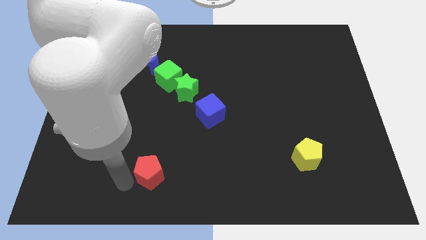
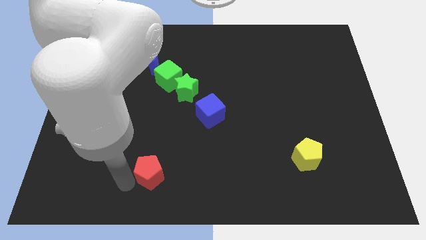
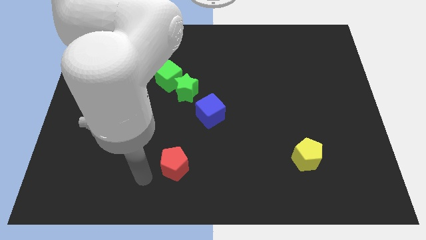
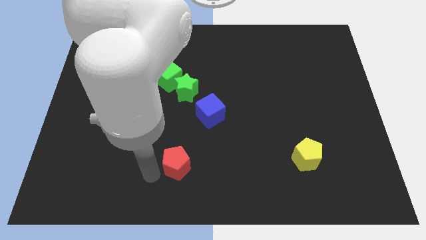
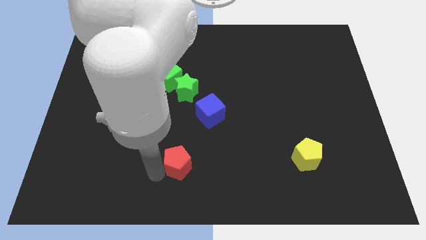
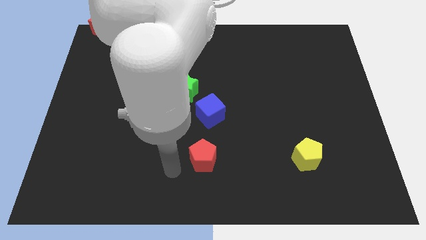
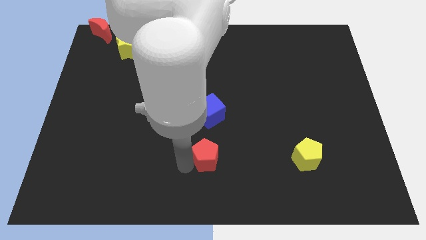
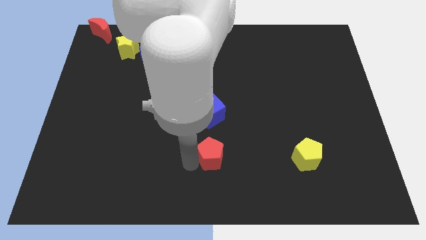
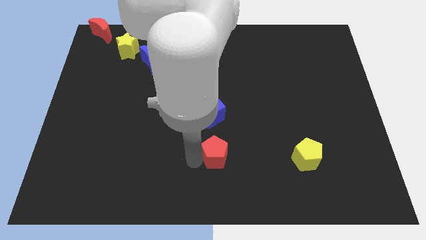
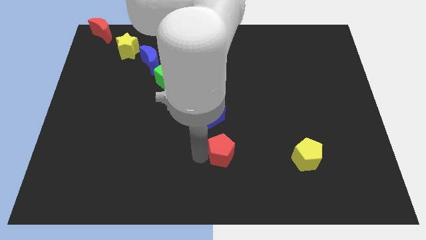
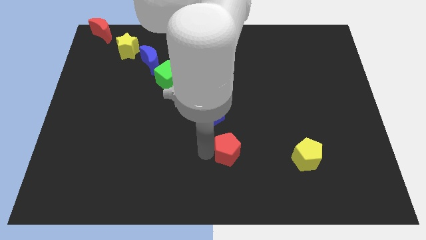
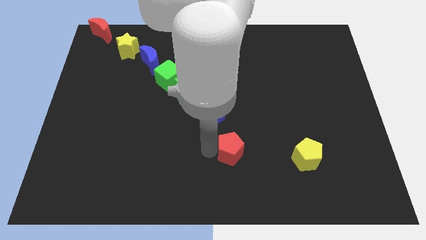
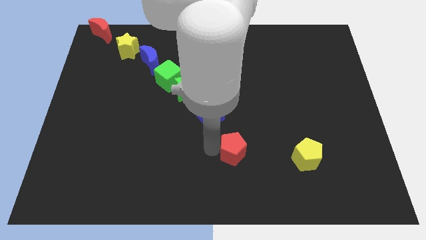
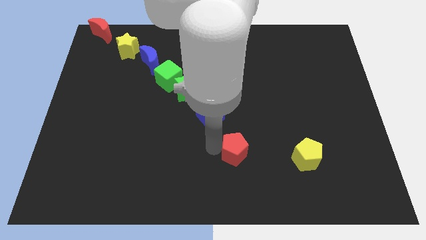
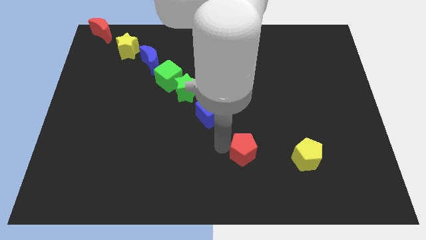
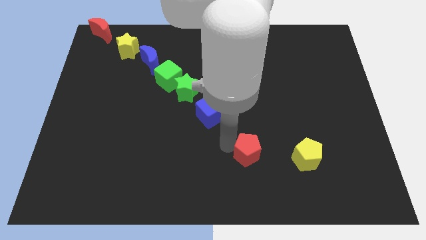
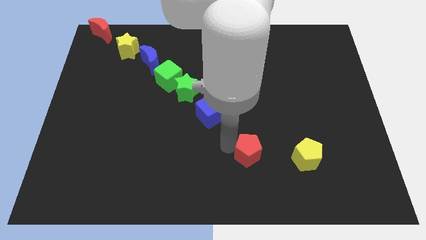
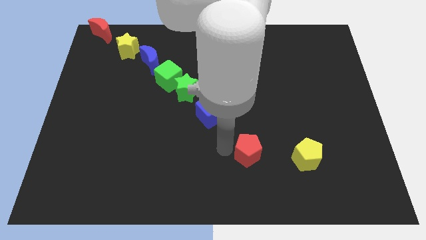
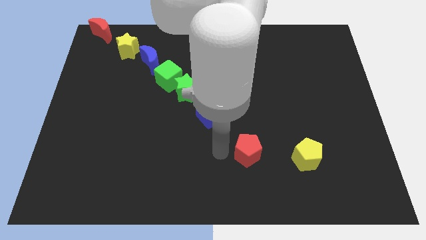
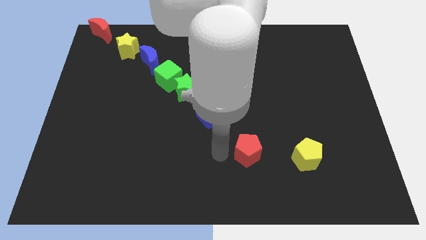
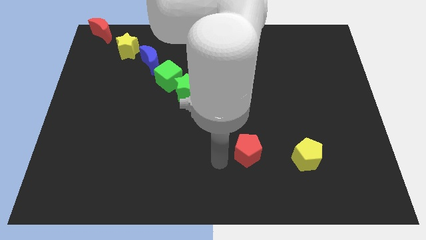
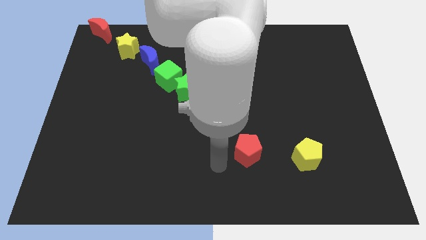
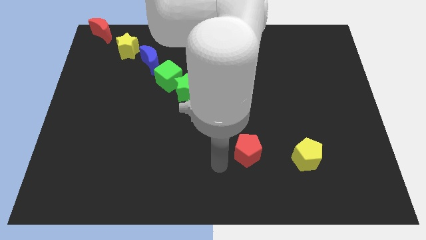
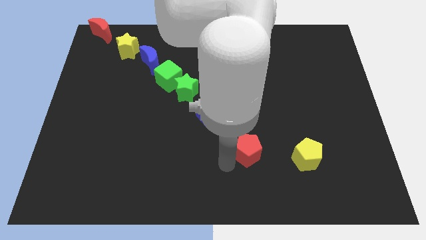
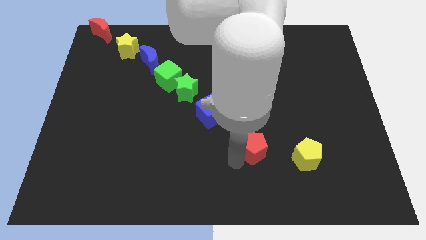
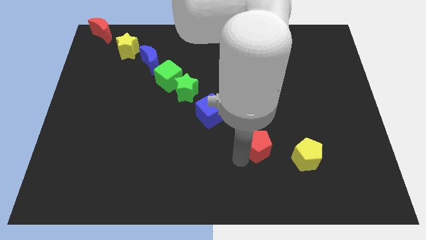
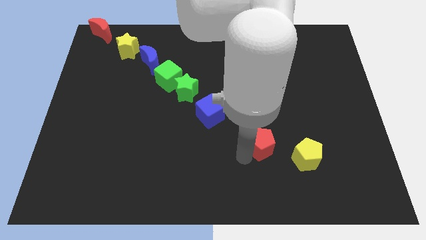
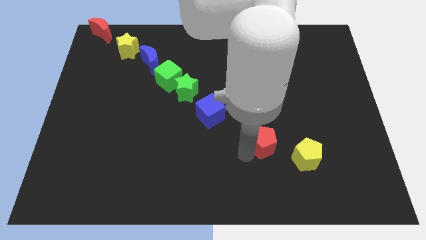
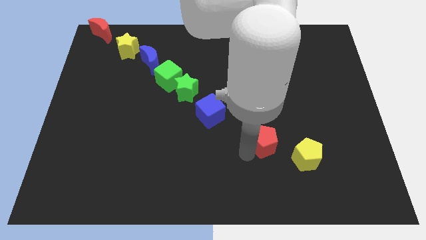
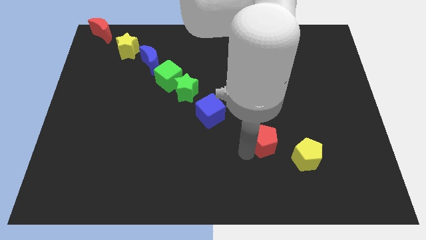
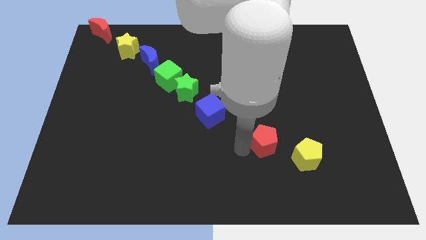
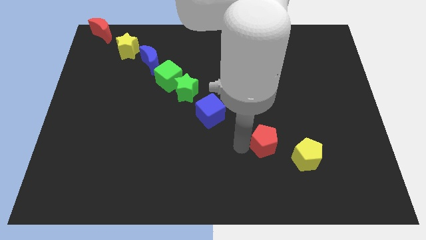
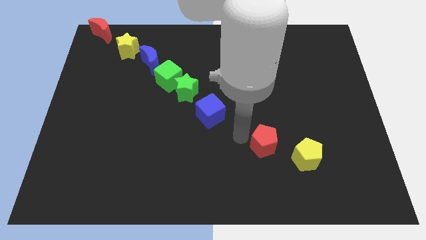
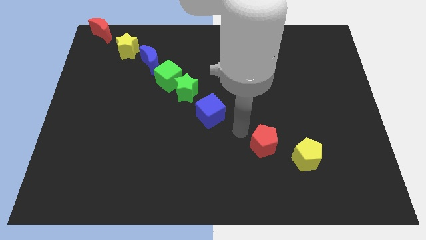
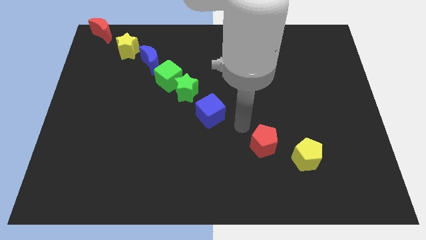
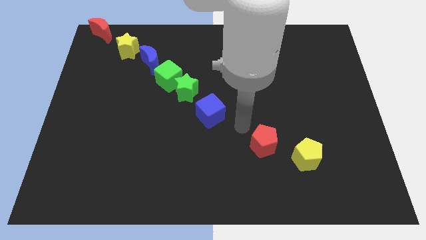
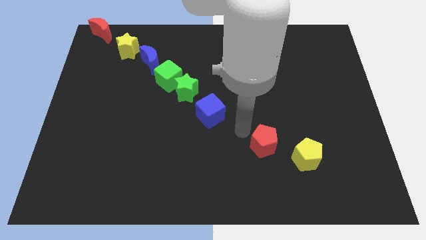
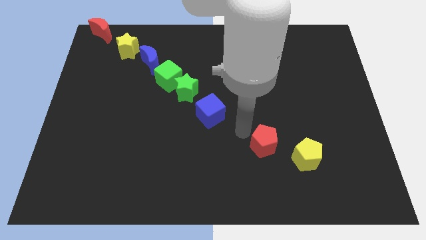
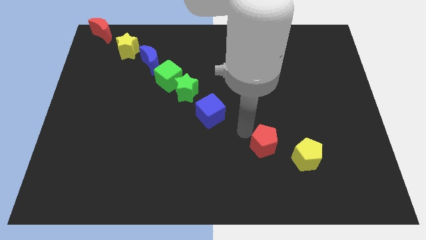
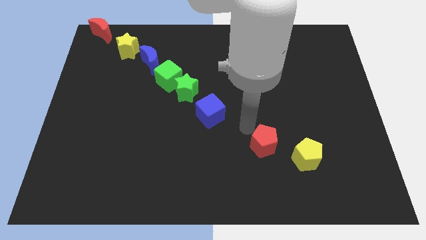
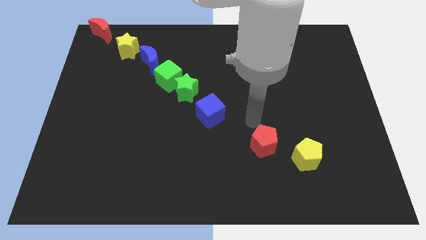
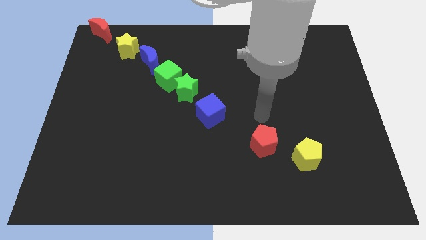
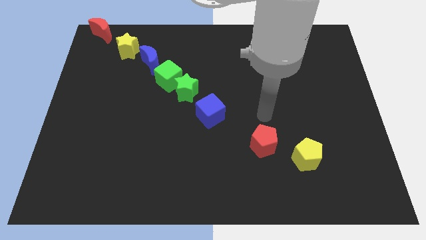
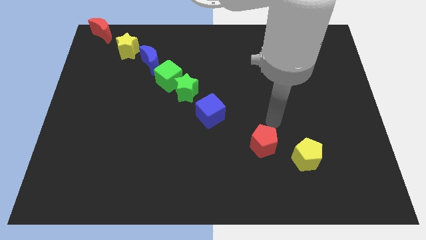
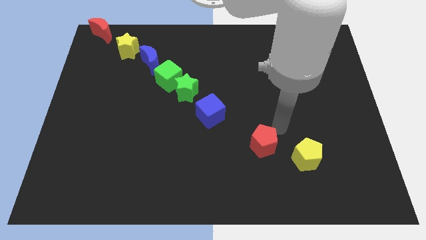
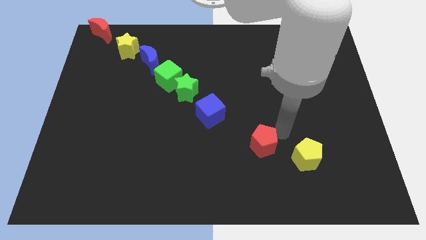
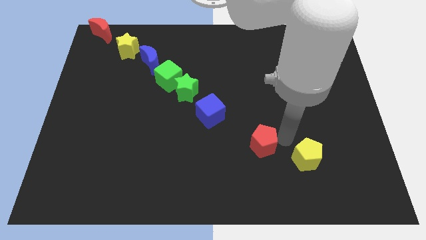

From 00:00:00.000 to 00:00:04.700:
move red pentagon slightly right

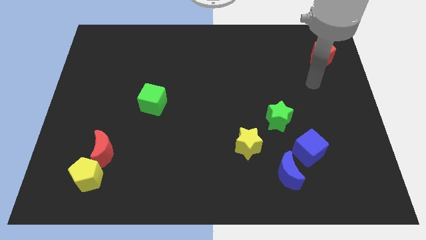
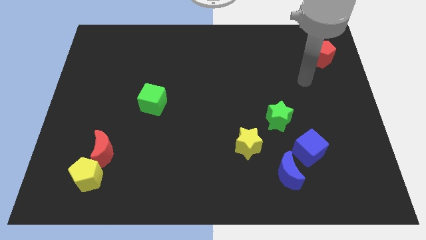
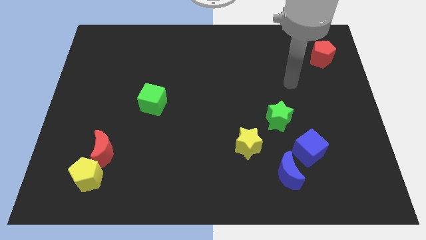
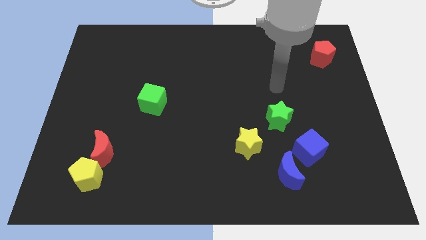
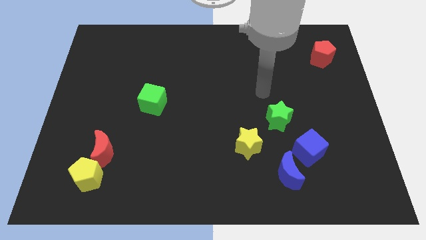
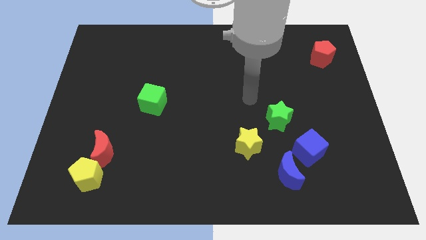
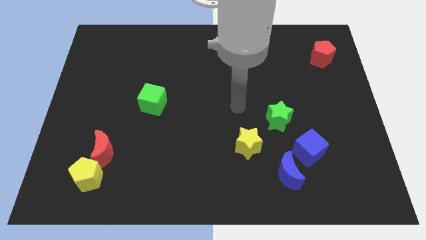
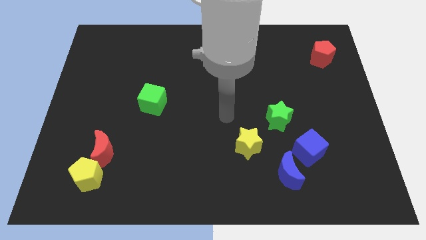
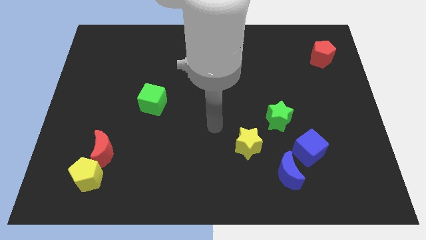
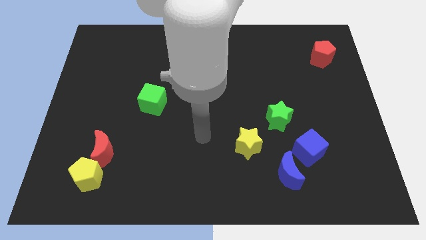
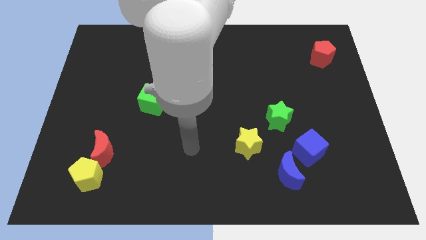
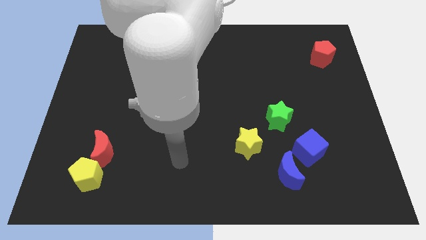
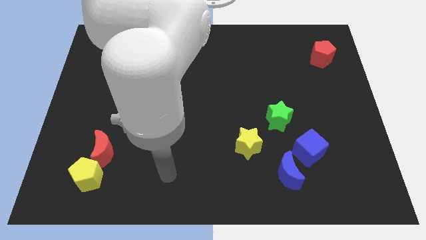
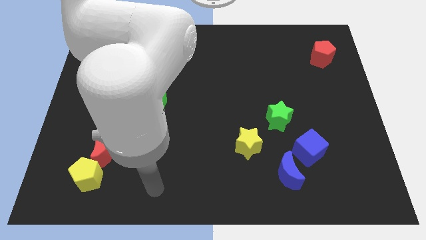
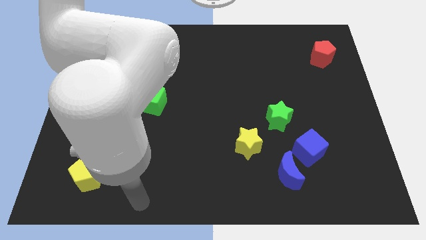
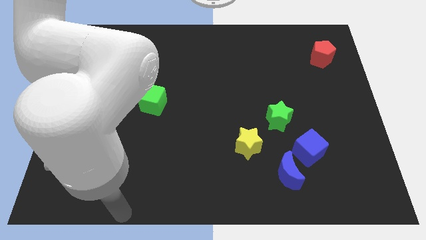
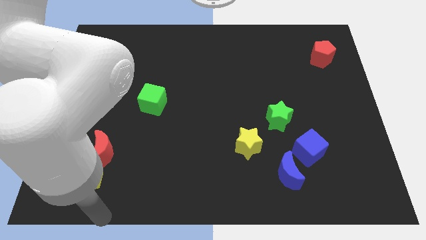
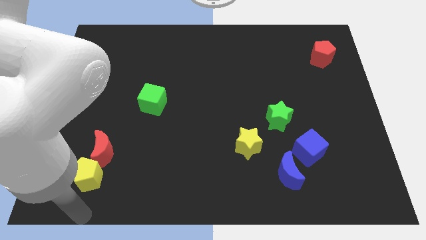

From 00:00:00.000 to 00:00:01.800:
place your arm at the bottom of the yellow pentagon

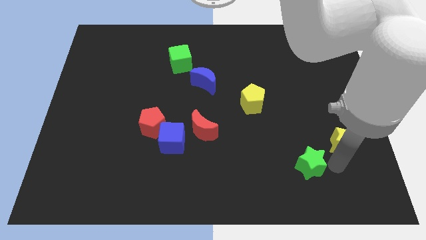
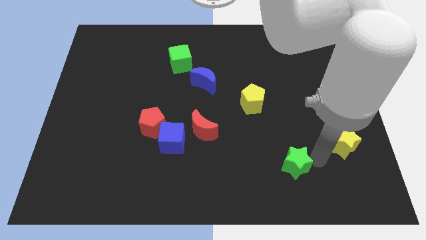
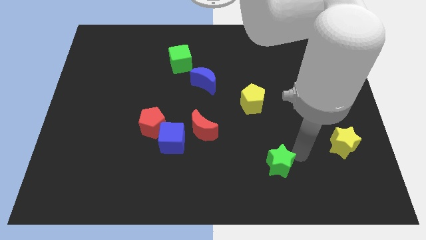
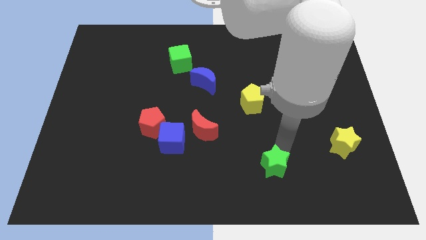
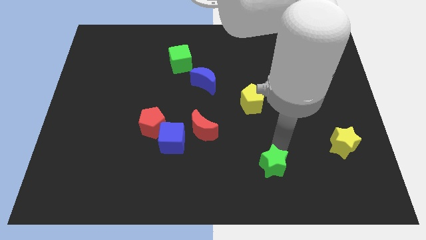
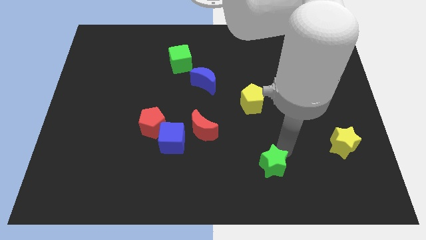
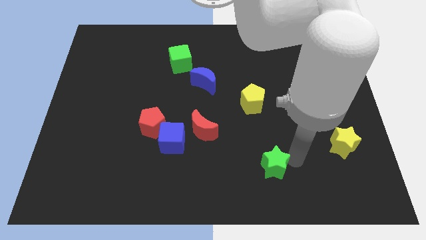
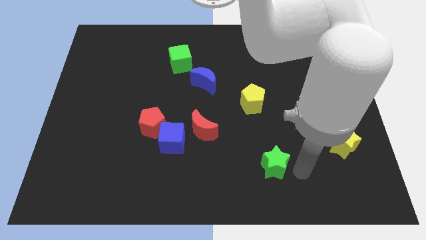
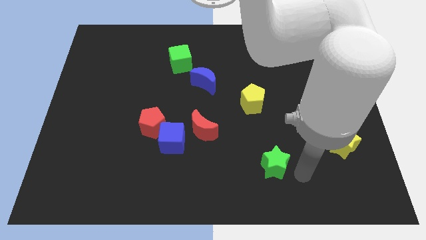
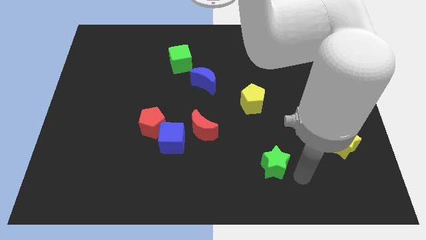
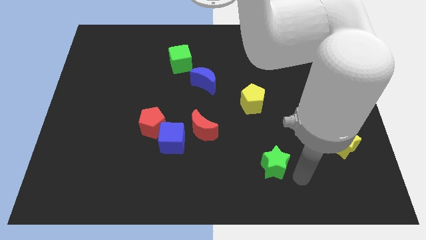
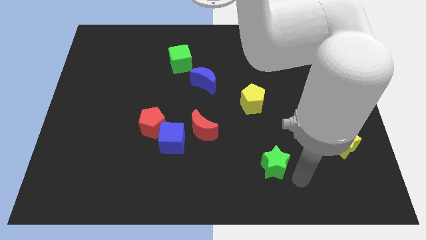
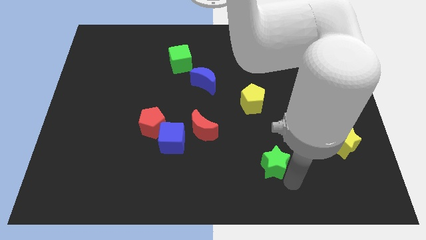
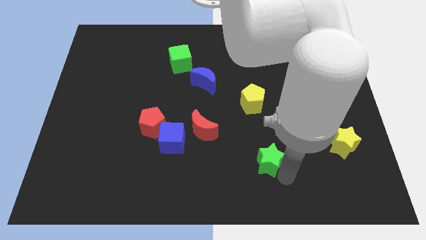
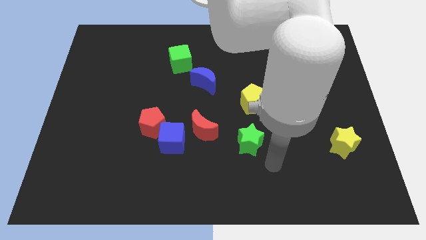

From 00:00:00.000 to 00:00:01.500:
push the green star vertically to the bottom side of the yellow pentagon

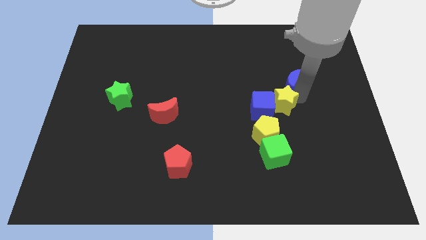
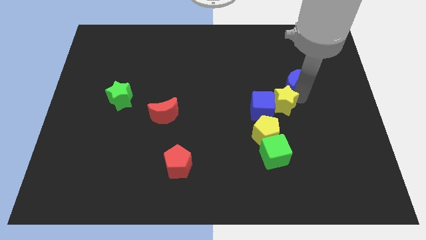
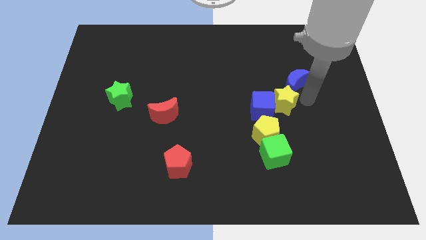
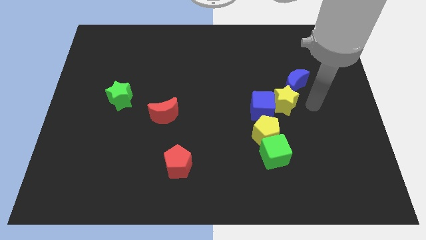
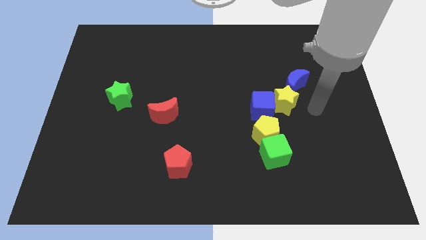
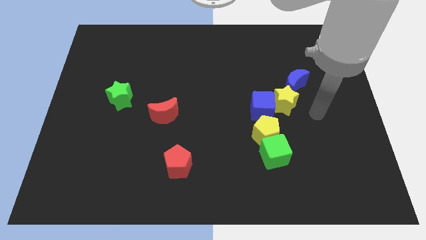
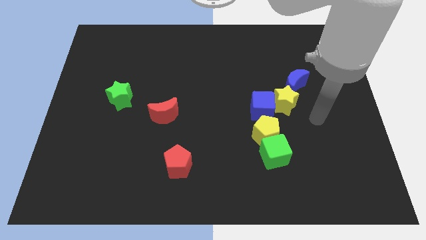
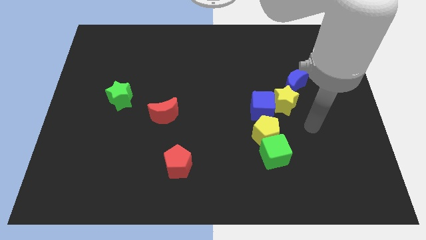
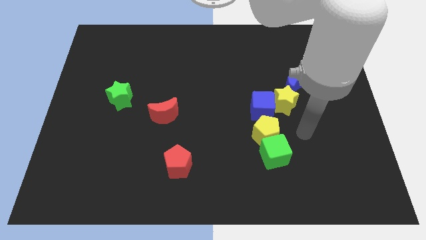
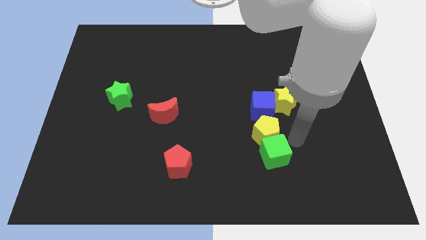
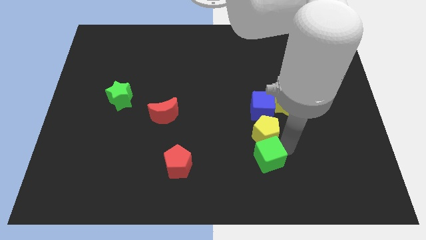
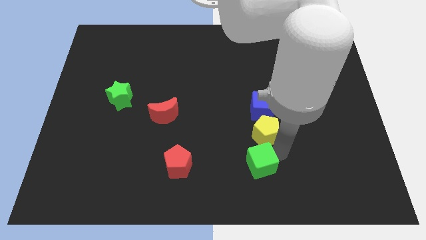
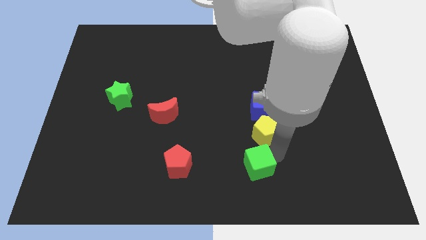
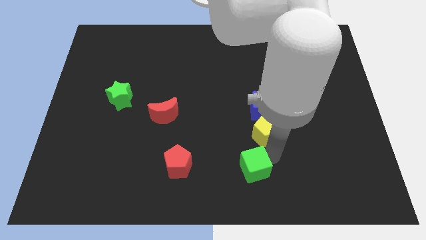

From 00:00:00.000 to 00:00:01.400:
separate the green cube from the yellow pentagon
